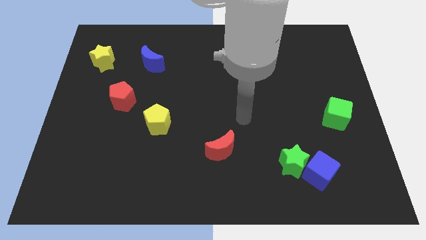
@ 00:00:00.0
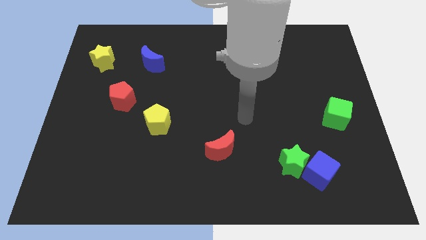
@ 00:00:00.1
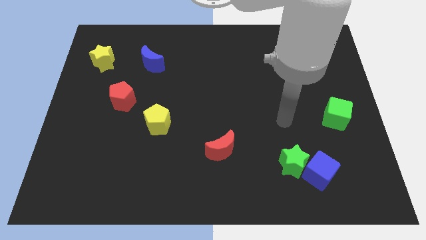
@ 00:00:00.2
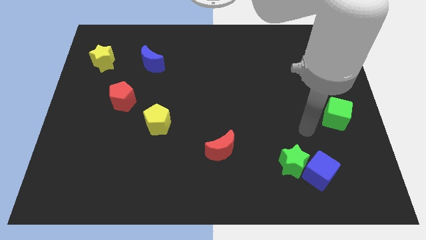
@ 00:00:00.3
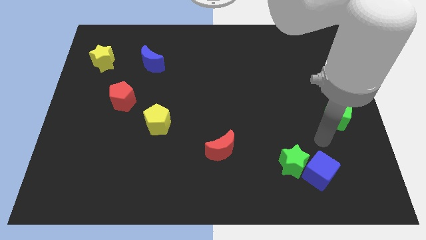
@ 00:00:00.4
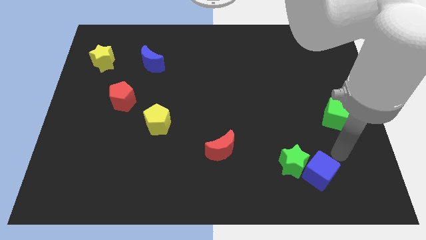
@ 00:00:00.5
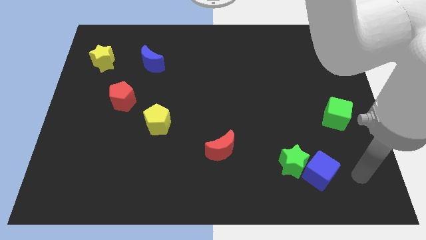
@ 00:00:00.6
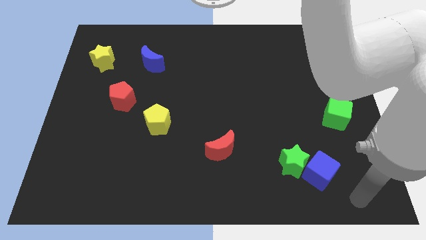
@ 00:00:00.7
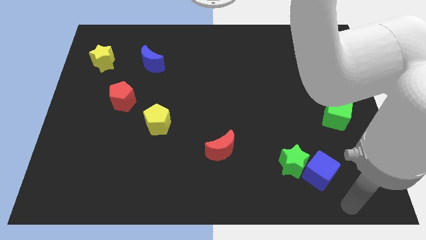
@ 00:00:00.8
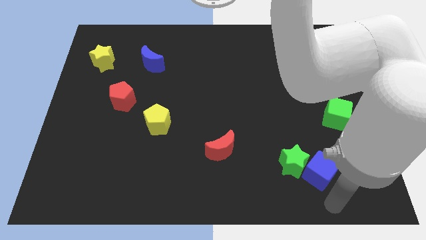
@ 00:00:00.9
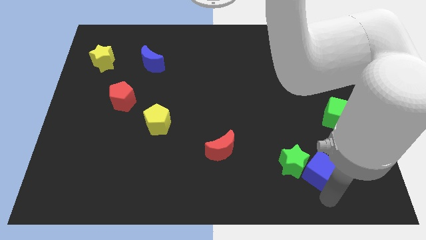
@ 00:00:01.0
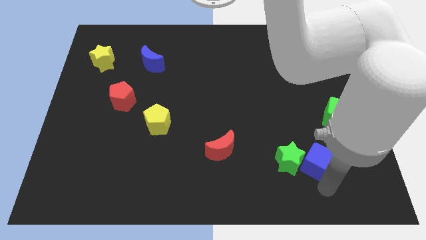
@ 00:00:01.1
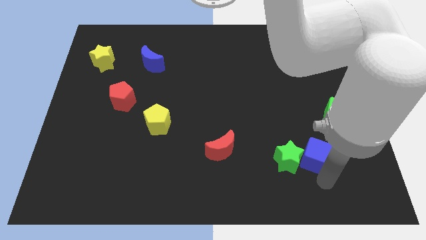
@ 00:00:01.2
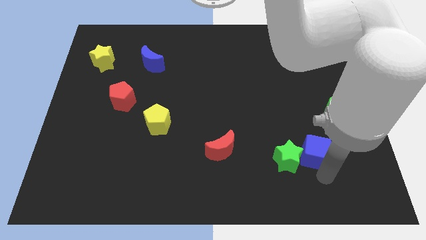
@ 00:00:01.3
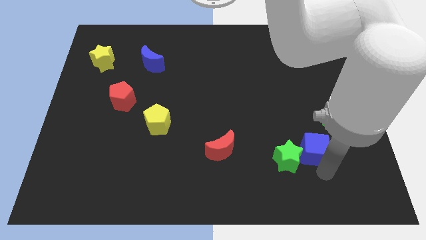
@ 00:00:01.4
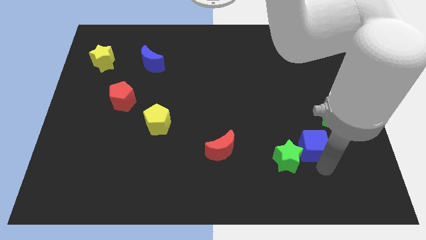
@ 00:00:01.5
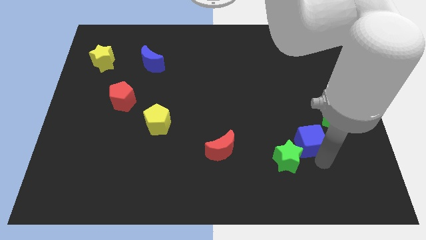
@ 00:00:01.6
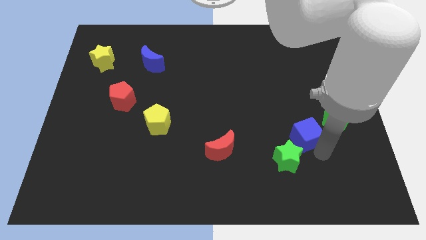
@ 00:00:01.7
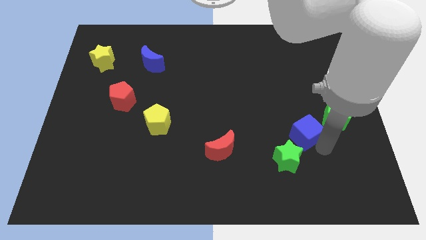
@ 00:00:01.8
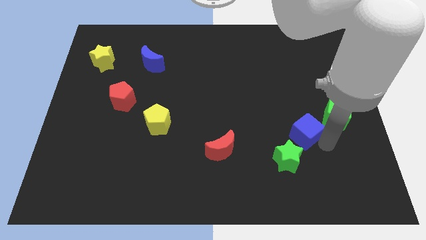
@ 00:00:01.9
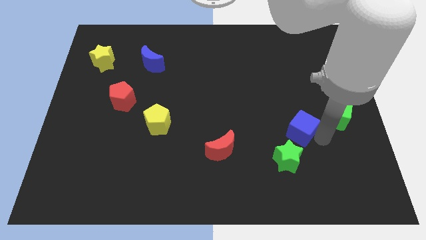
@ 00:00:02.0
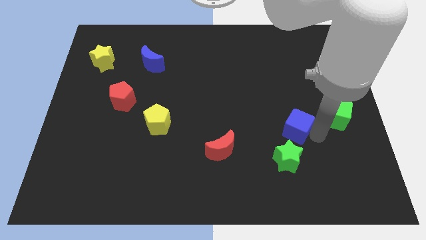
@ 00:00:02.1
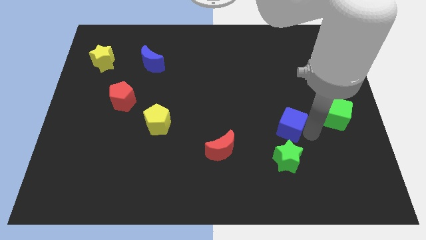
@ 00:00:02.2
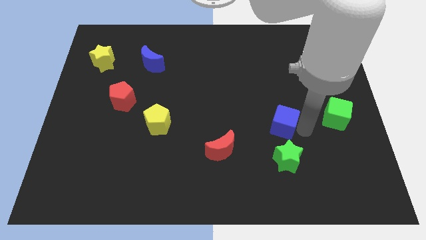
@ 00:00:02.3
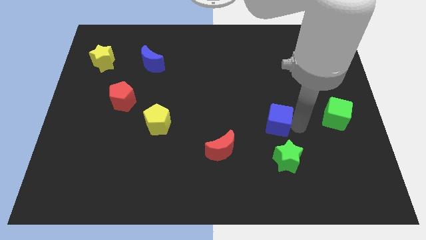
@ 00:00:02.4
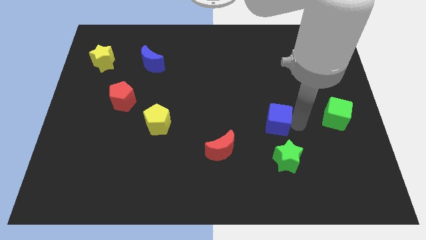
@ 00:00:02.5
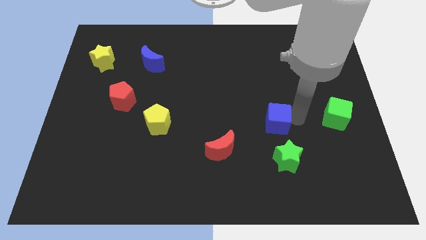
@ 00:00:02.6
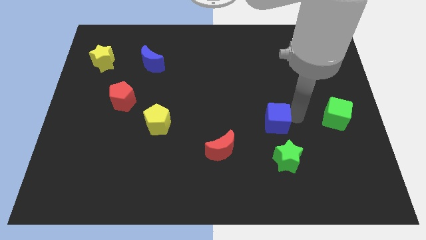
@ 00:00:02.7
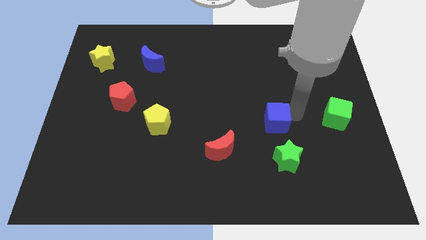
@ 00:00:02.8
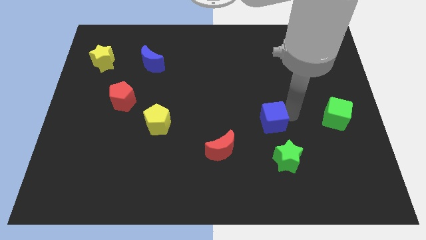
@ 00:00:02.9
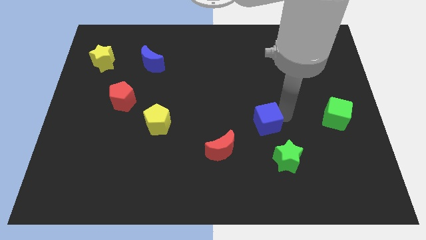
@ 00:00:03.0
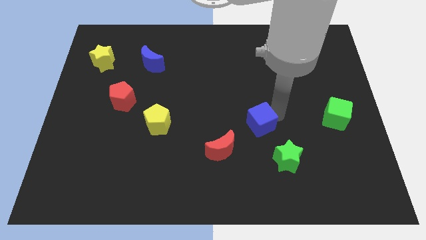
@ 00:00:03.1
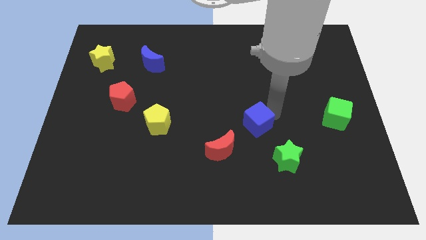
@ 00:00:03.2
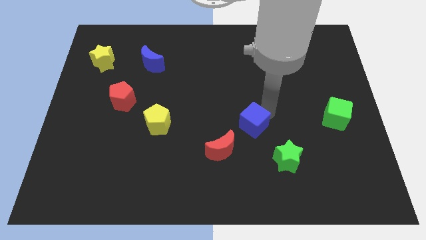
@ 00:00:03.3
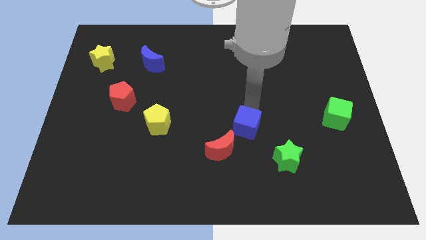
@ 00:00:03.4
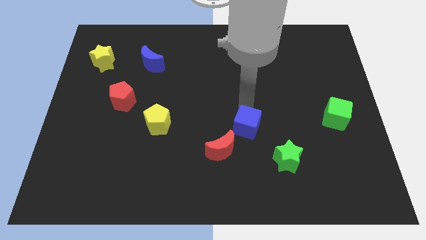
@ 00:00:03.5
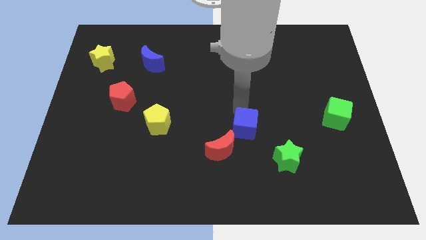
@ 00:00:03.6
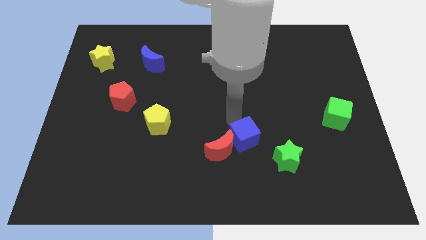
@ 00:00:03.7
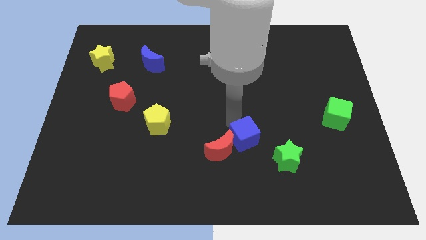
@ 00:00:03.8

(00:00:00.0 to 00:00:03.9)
slide the blue cube to the red moon

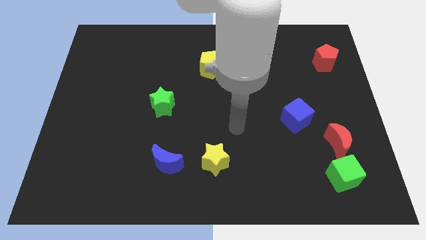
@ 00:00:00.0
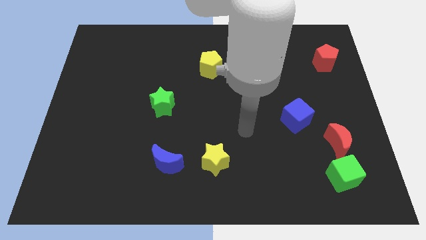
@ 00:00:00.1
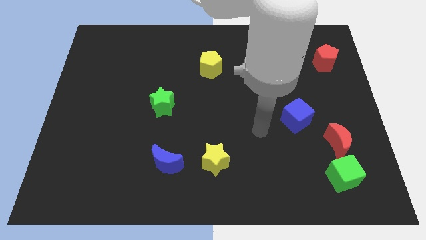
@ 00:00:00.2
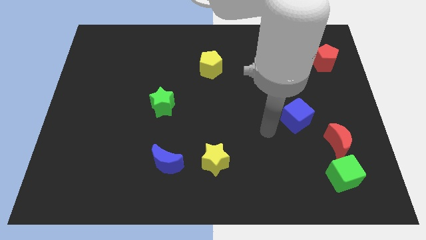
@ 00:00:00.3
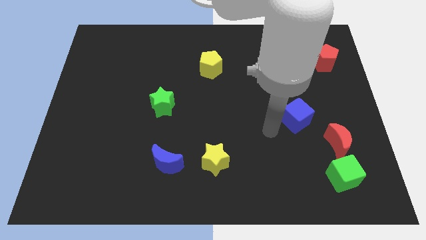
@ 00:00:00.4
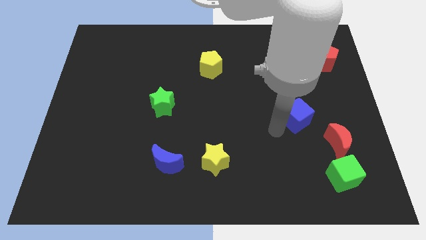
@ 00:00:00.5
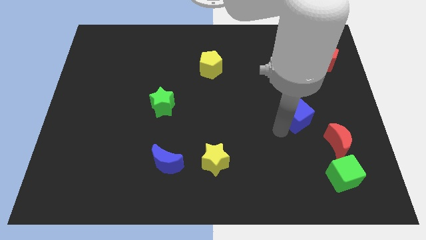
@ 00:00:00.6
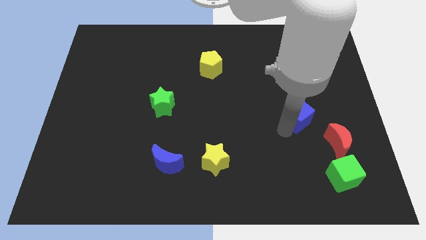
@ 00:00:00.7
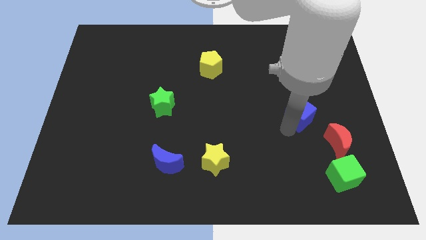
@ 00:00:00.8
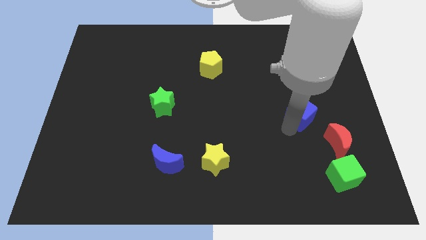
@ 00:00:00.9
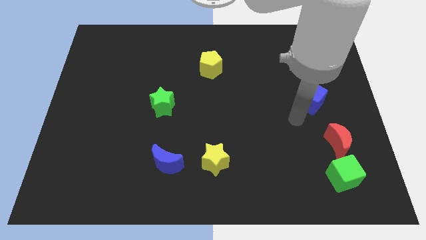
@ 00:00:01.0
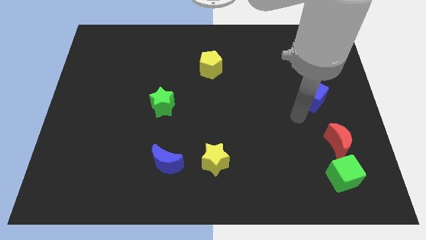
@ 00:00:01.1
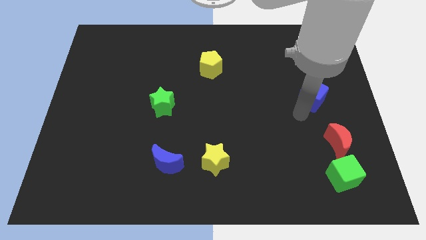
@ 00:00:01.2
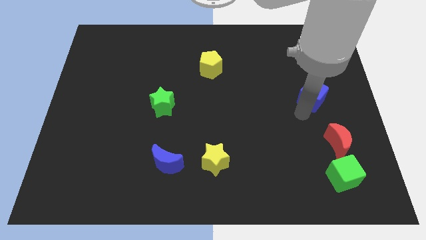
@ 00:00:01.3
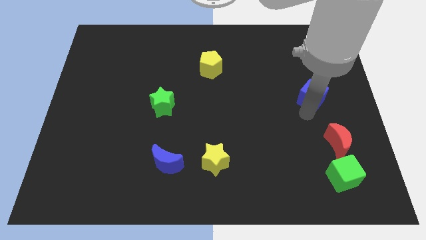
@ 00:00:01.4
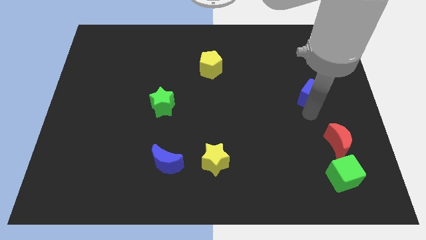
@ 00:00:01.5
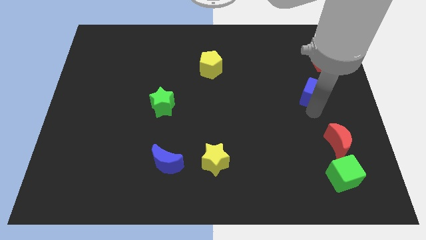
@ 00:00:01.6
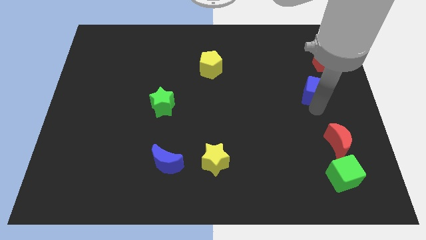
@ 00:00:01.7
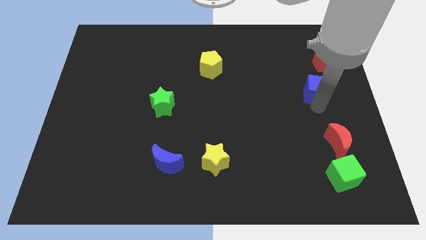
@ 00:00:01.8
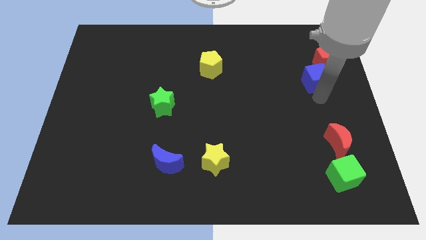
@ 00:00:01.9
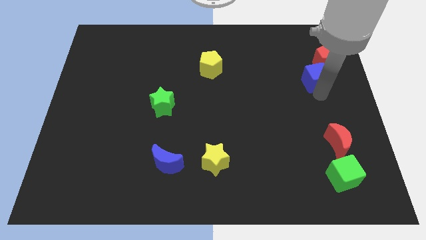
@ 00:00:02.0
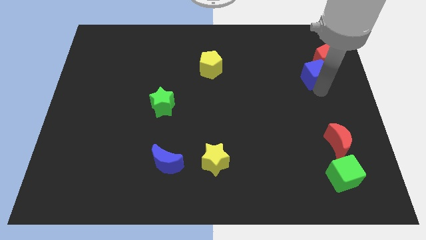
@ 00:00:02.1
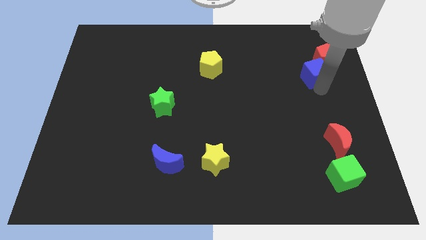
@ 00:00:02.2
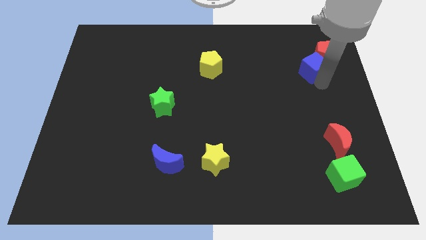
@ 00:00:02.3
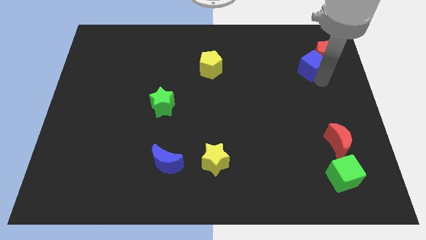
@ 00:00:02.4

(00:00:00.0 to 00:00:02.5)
put the blue cube next to the red pentagon

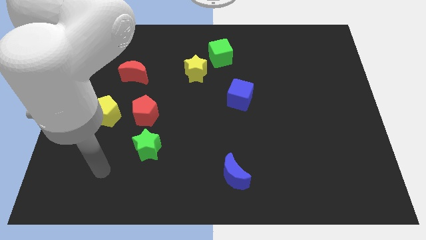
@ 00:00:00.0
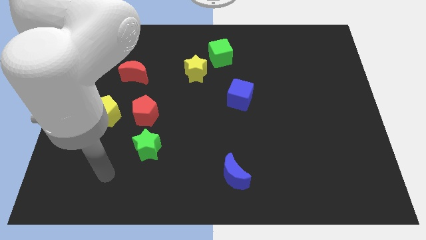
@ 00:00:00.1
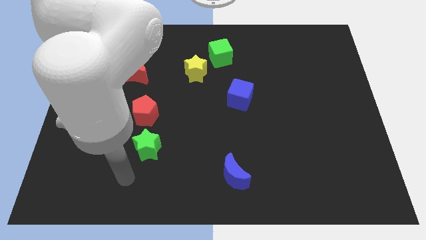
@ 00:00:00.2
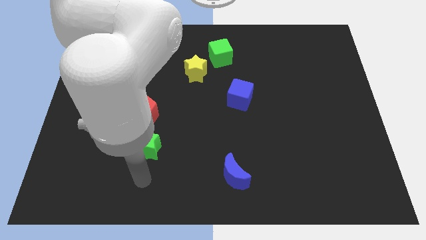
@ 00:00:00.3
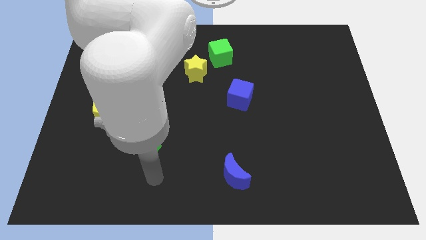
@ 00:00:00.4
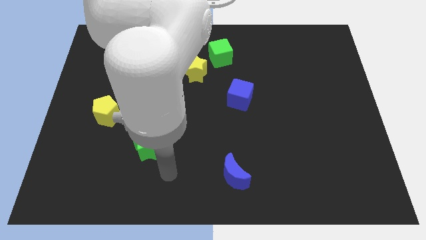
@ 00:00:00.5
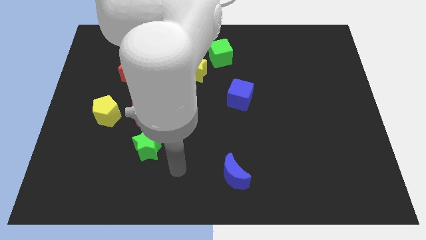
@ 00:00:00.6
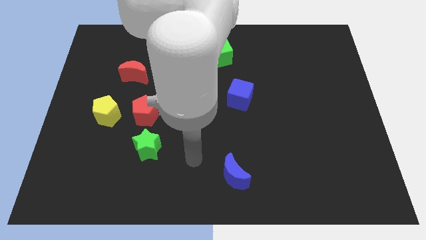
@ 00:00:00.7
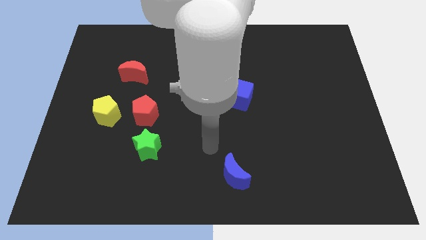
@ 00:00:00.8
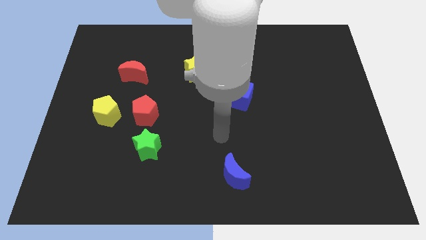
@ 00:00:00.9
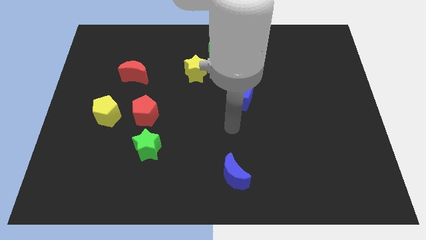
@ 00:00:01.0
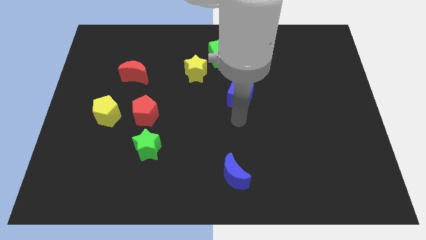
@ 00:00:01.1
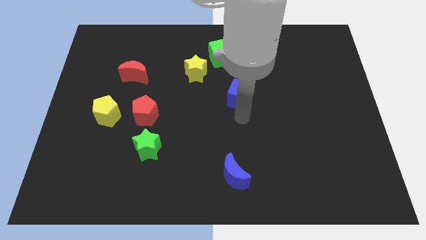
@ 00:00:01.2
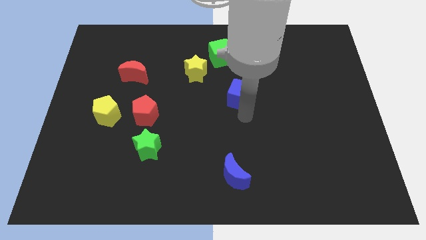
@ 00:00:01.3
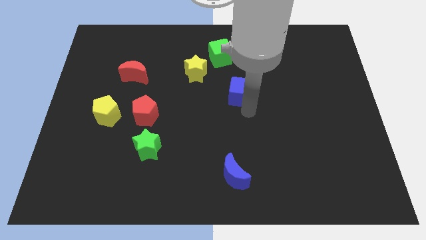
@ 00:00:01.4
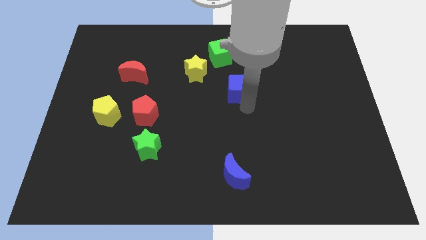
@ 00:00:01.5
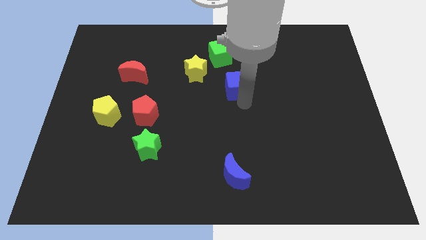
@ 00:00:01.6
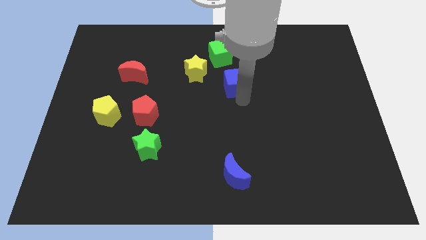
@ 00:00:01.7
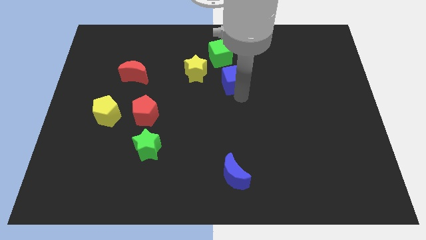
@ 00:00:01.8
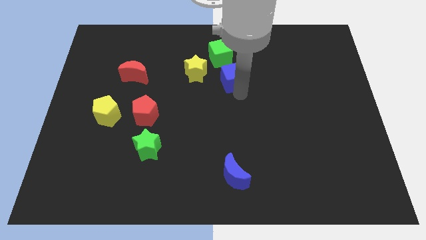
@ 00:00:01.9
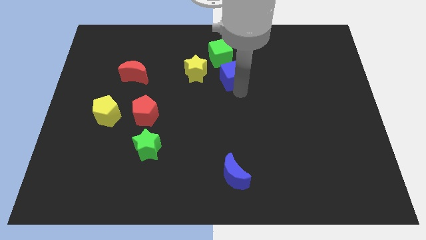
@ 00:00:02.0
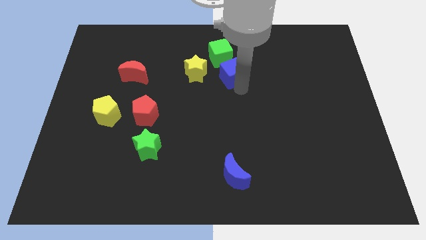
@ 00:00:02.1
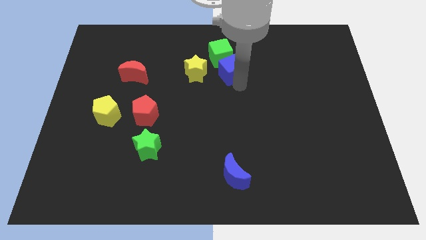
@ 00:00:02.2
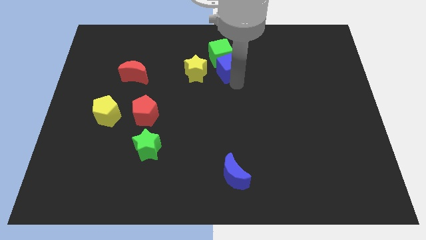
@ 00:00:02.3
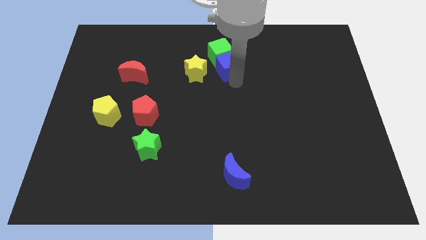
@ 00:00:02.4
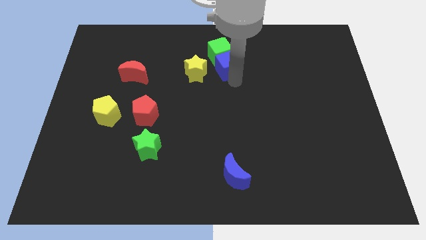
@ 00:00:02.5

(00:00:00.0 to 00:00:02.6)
put the blue cube towards the green cube
